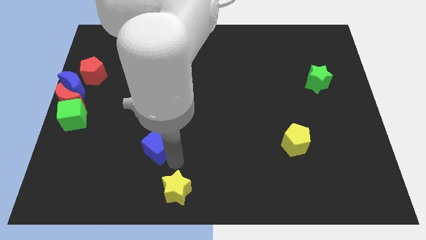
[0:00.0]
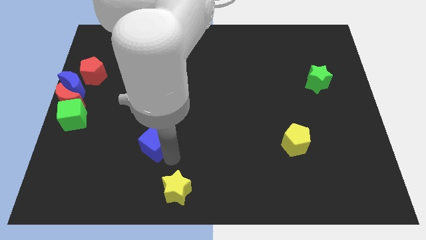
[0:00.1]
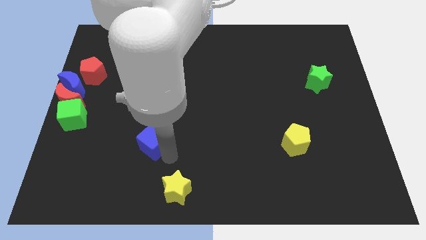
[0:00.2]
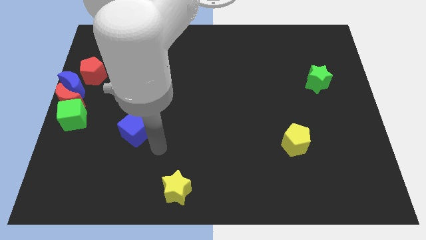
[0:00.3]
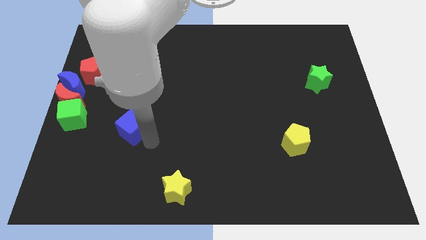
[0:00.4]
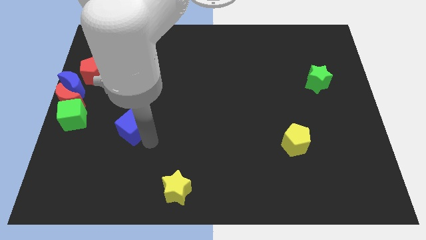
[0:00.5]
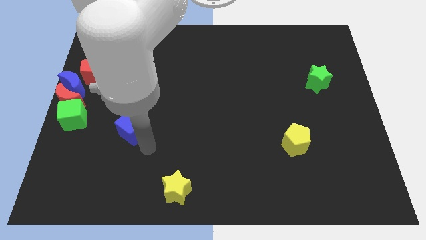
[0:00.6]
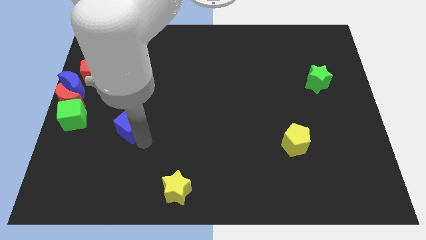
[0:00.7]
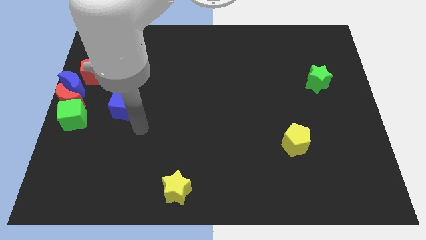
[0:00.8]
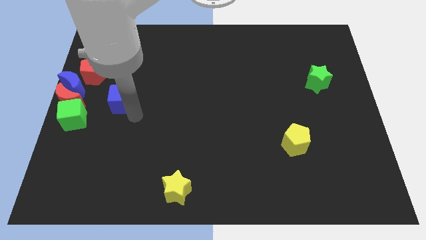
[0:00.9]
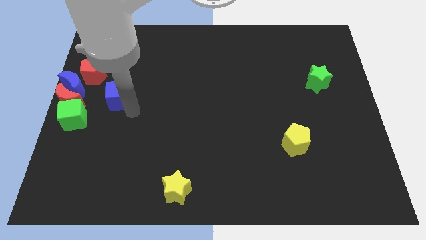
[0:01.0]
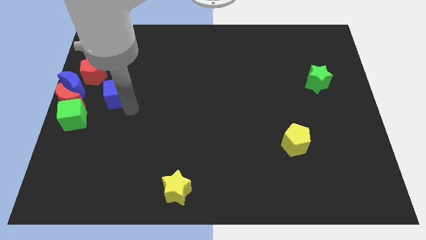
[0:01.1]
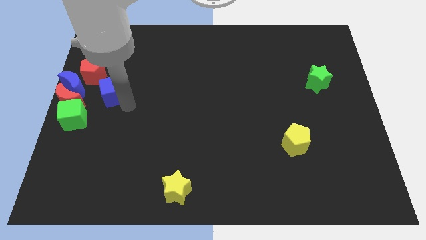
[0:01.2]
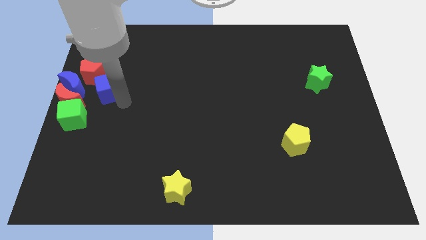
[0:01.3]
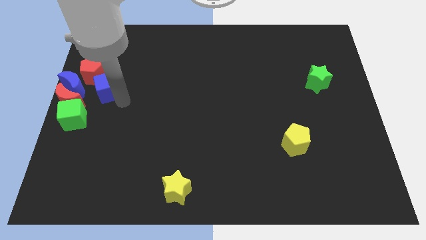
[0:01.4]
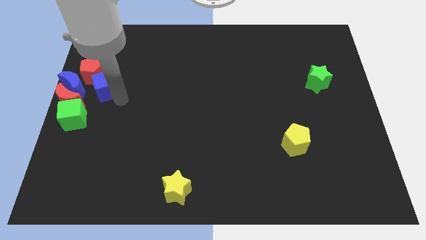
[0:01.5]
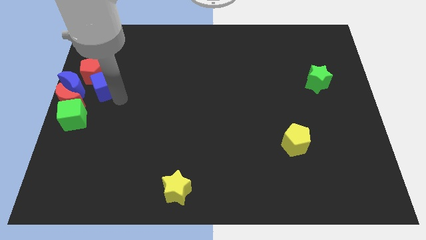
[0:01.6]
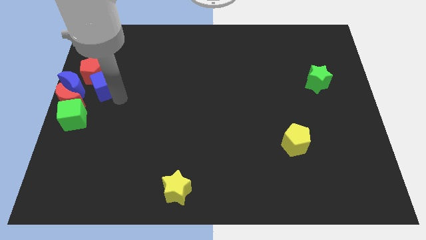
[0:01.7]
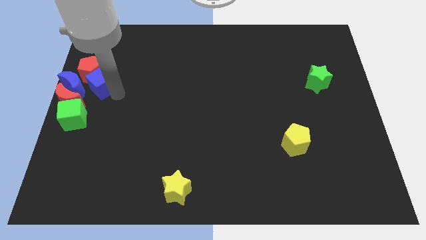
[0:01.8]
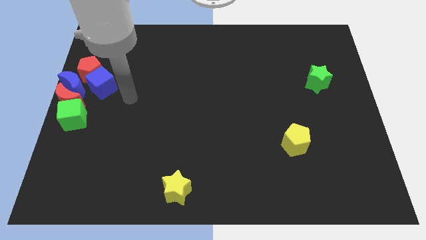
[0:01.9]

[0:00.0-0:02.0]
push the blue cube to the right of the blue crescent

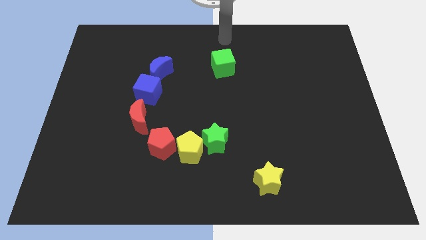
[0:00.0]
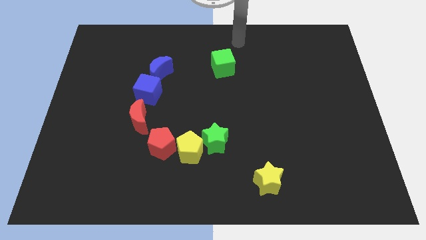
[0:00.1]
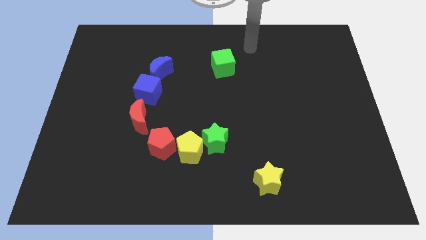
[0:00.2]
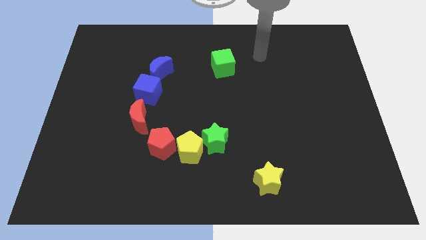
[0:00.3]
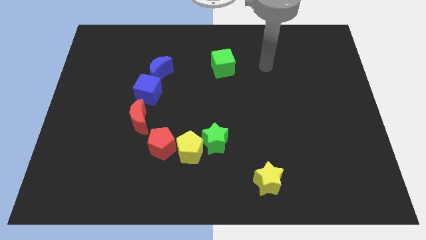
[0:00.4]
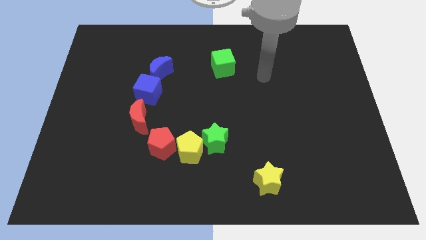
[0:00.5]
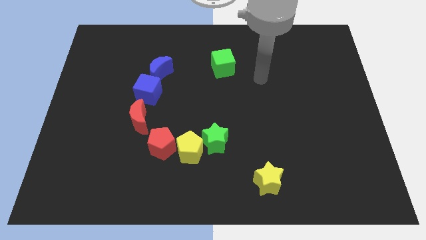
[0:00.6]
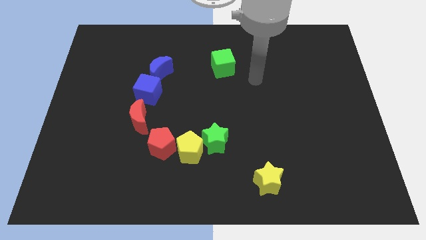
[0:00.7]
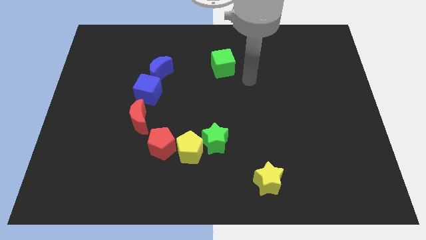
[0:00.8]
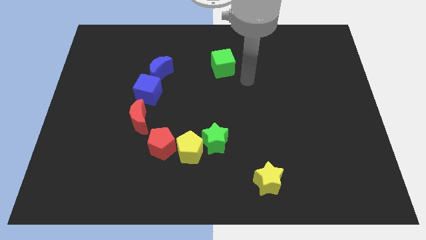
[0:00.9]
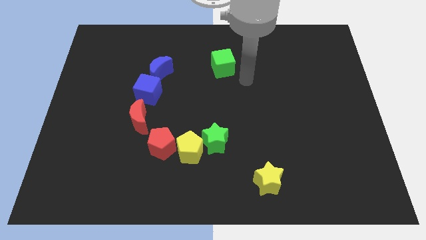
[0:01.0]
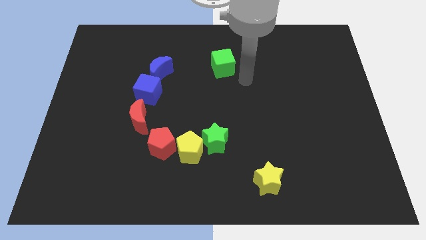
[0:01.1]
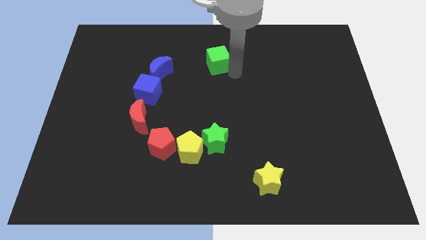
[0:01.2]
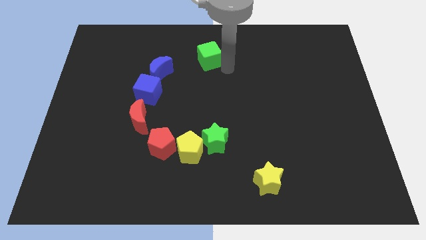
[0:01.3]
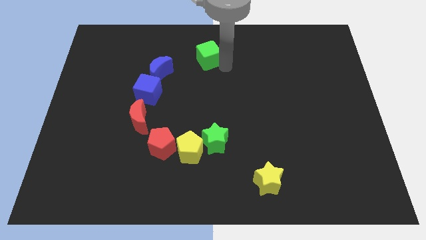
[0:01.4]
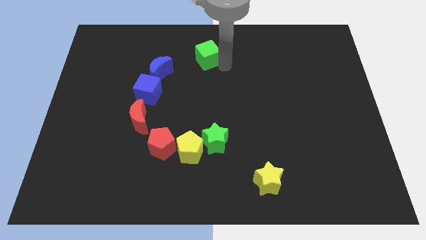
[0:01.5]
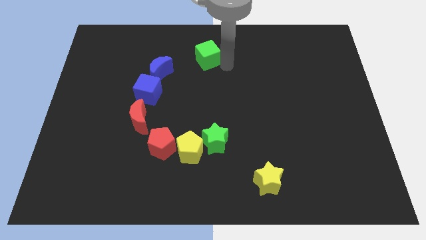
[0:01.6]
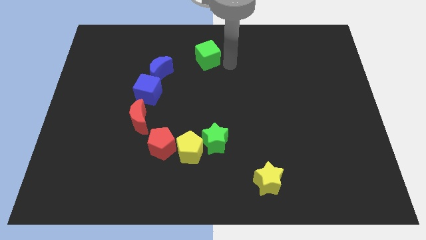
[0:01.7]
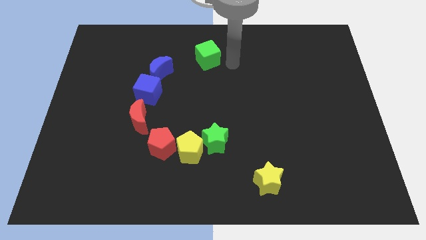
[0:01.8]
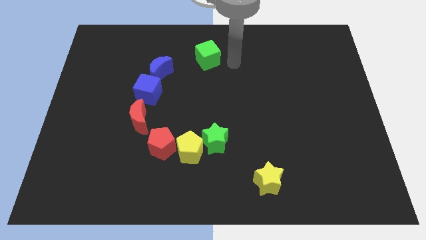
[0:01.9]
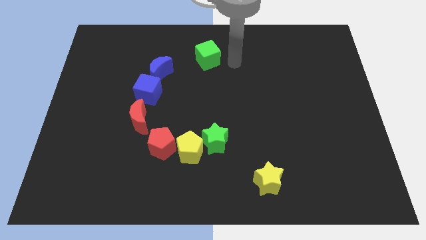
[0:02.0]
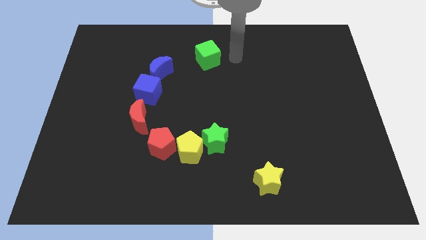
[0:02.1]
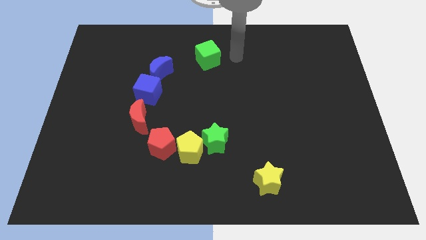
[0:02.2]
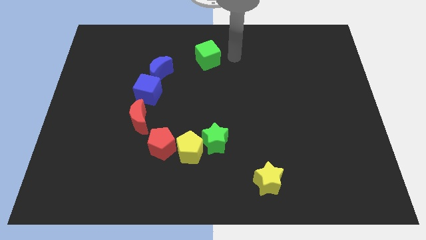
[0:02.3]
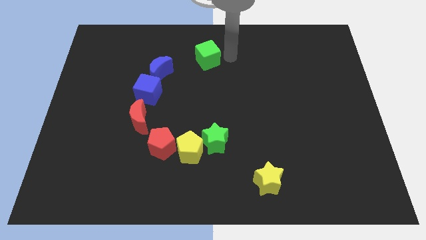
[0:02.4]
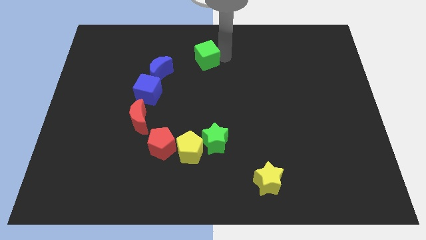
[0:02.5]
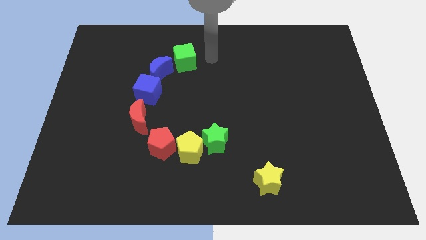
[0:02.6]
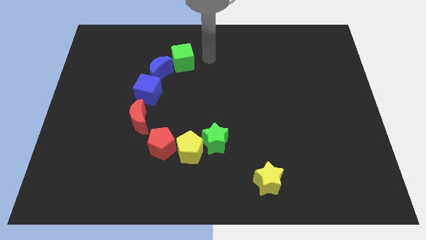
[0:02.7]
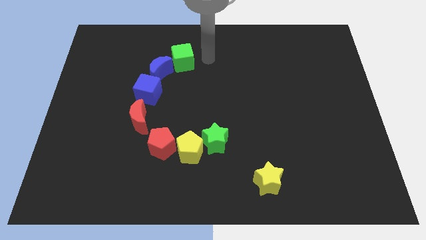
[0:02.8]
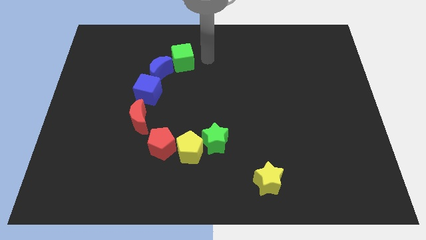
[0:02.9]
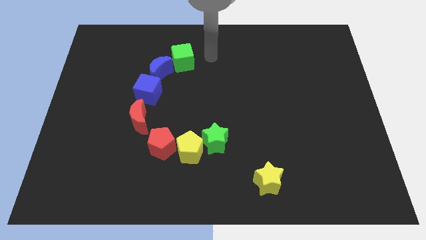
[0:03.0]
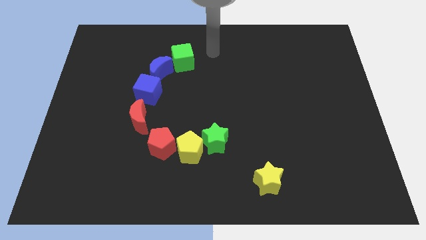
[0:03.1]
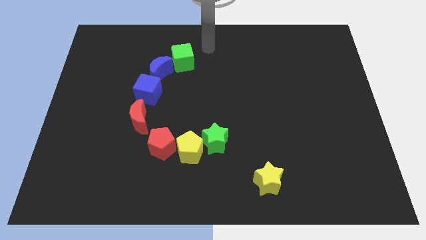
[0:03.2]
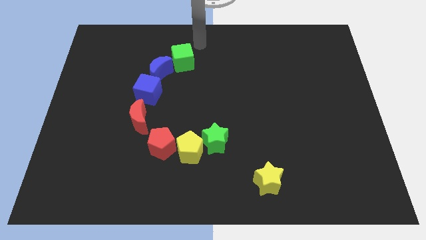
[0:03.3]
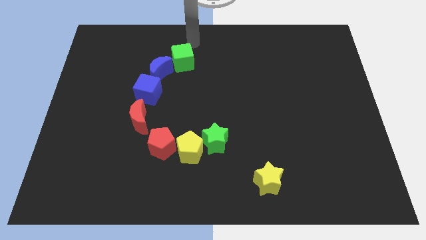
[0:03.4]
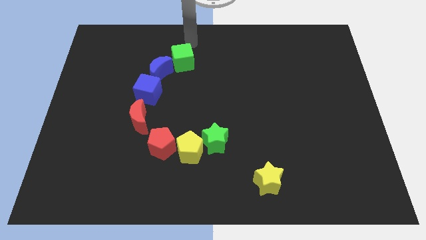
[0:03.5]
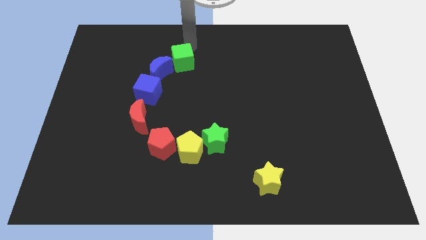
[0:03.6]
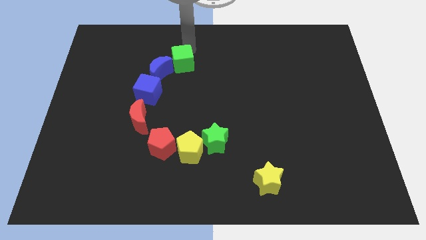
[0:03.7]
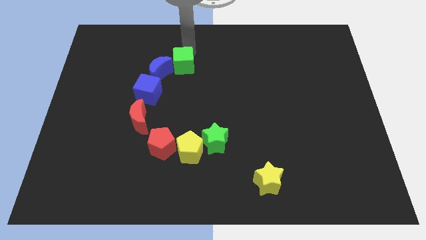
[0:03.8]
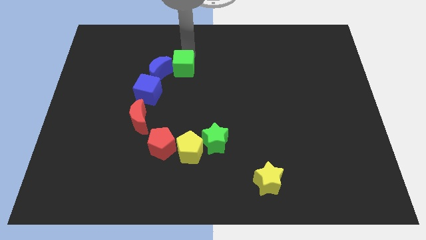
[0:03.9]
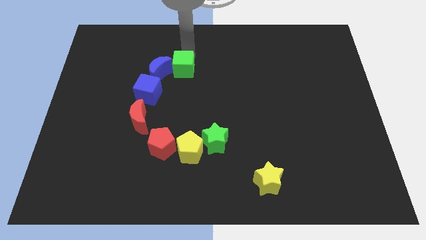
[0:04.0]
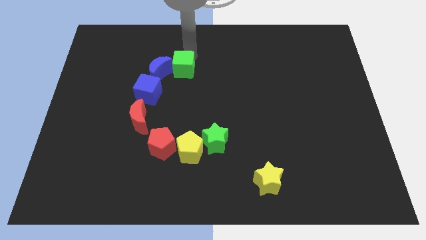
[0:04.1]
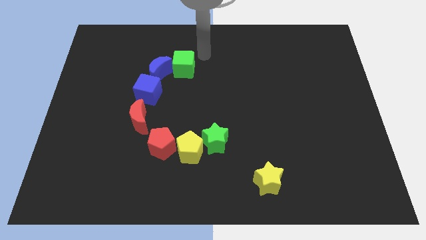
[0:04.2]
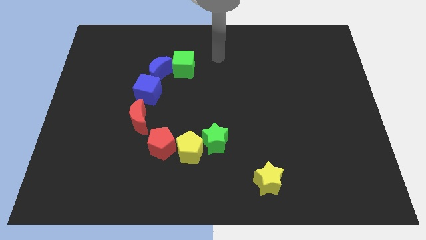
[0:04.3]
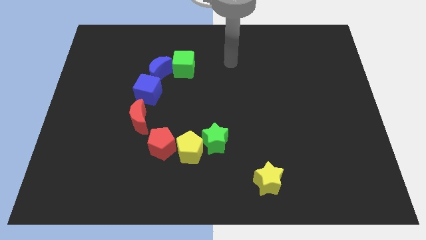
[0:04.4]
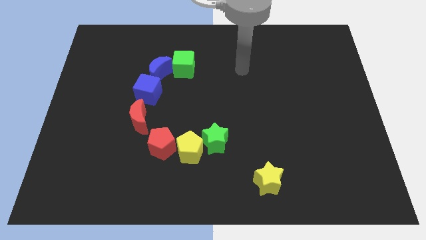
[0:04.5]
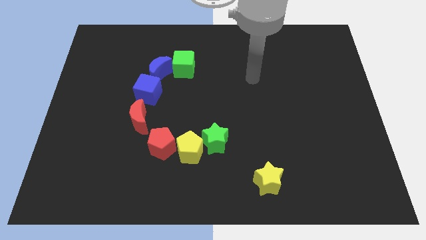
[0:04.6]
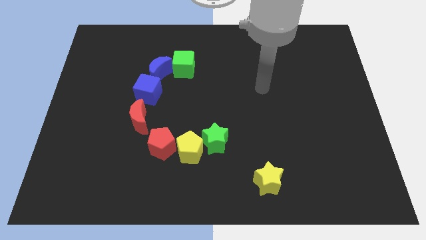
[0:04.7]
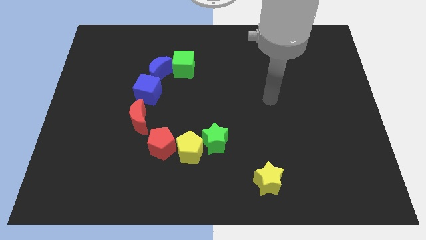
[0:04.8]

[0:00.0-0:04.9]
place the green cube into the blue moon

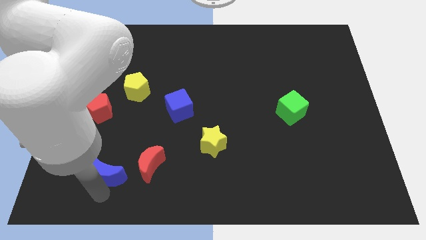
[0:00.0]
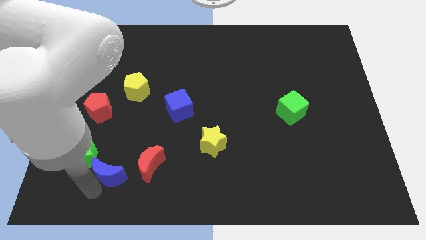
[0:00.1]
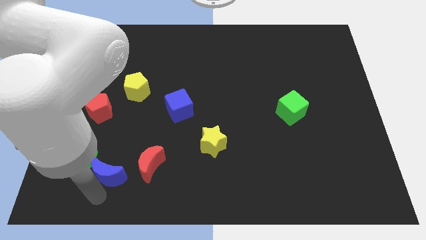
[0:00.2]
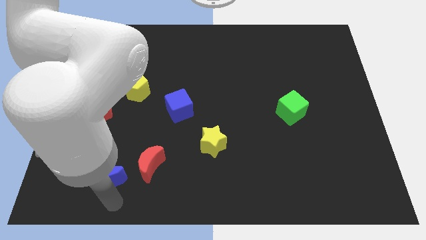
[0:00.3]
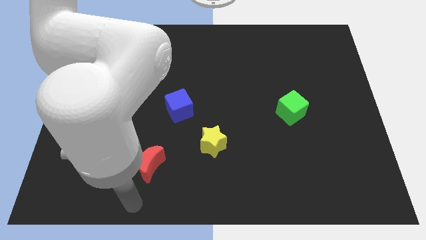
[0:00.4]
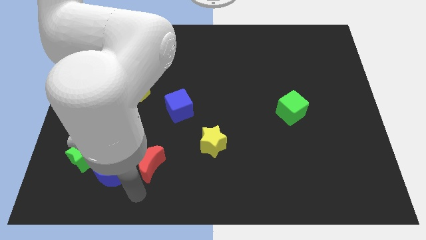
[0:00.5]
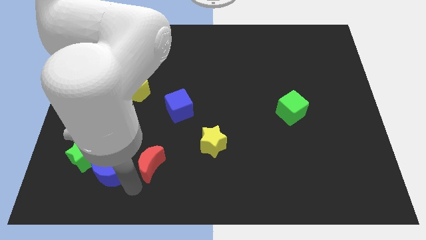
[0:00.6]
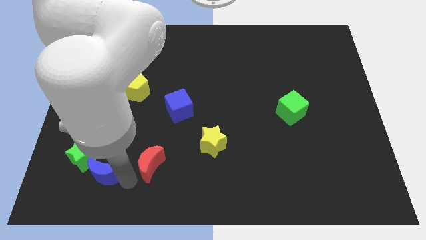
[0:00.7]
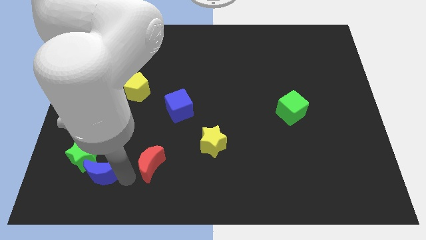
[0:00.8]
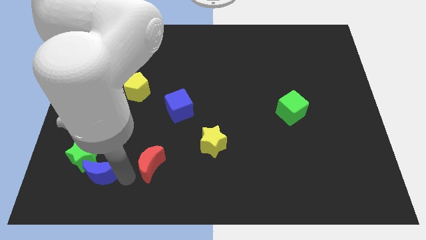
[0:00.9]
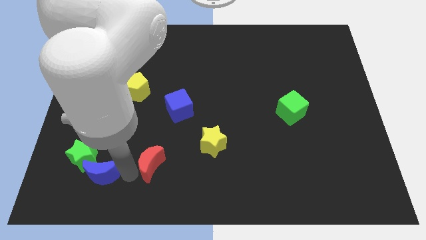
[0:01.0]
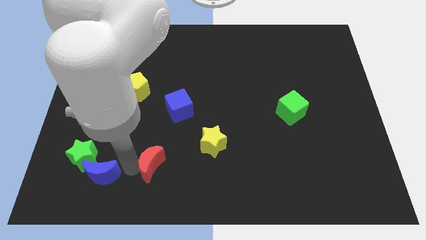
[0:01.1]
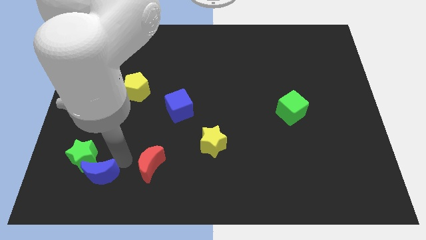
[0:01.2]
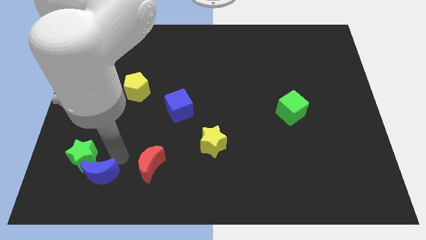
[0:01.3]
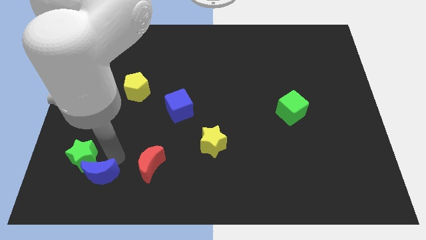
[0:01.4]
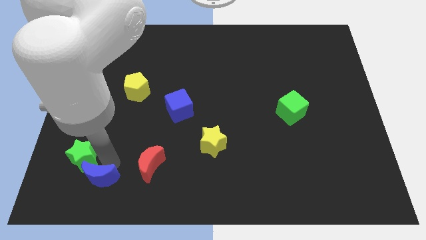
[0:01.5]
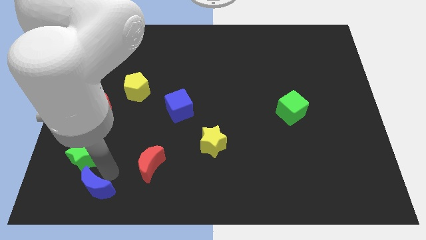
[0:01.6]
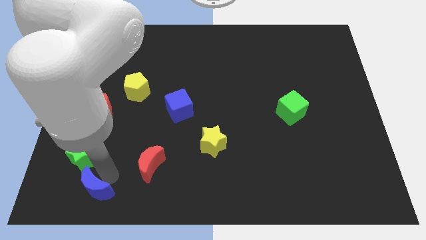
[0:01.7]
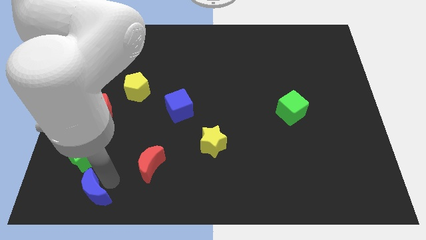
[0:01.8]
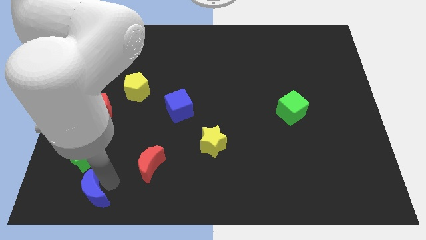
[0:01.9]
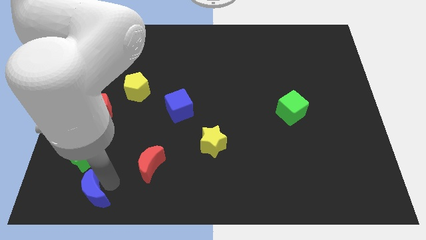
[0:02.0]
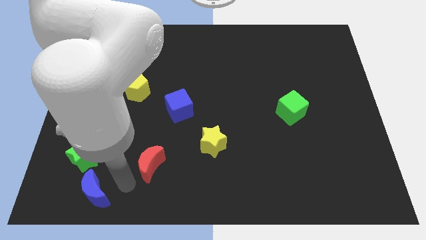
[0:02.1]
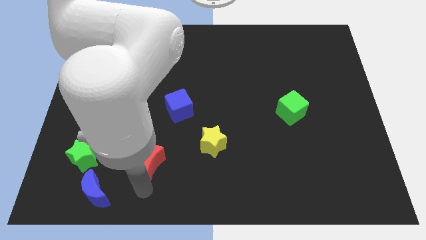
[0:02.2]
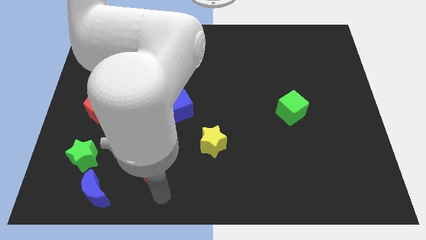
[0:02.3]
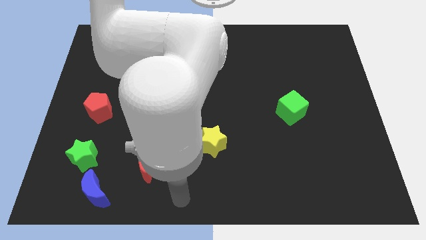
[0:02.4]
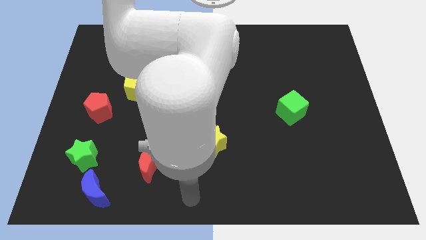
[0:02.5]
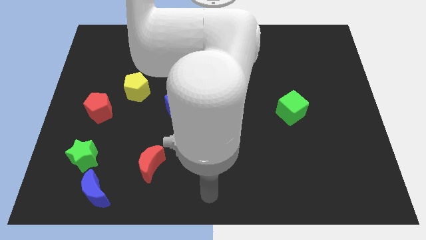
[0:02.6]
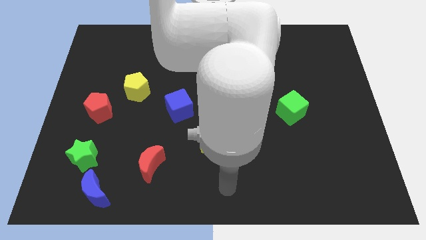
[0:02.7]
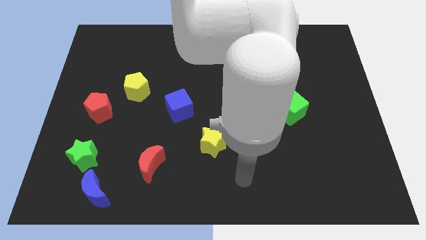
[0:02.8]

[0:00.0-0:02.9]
move the blue crescent down slightly
